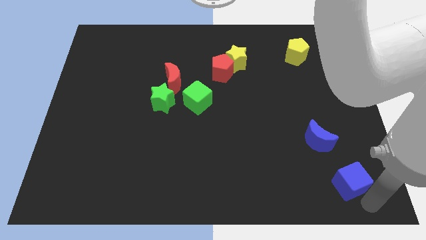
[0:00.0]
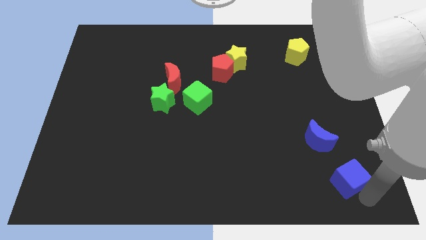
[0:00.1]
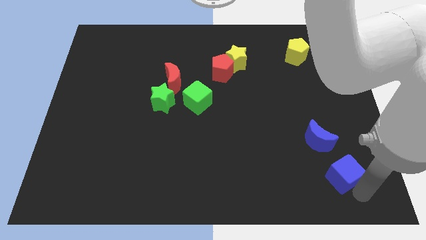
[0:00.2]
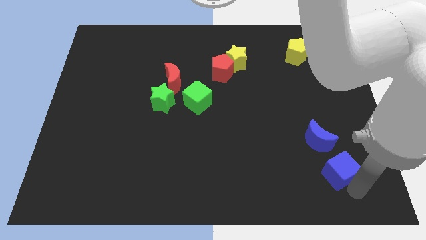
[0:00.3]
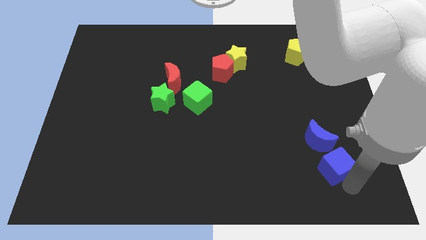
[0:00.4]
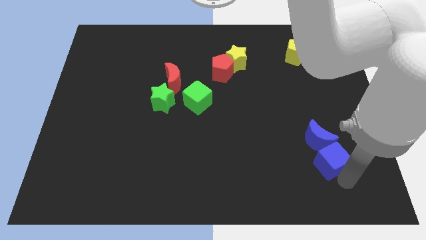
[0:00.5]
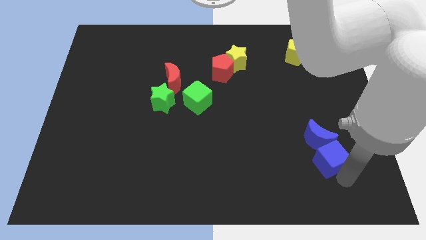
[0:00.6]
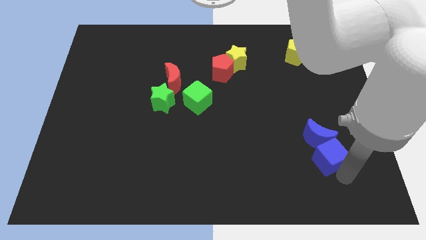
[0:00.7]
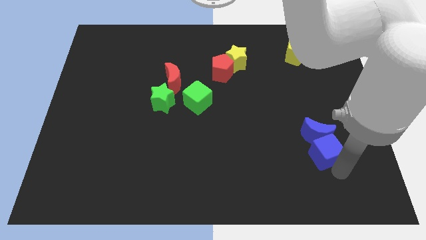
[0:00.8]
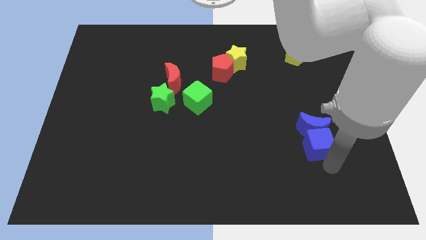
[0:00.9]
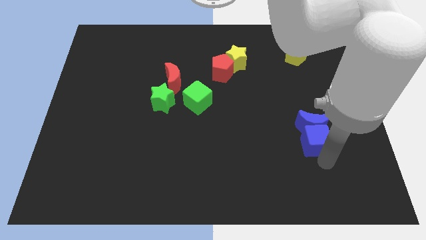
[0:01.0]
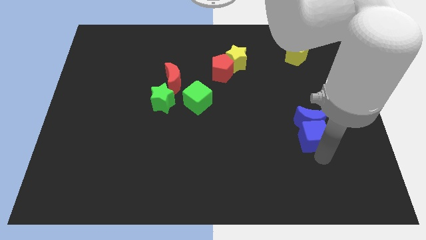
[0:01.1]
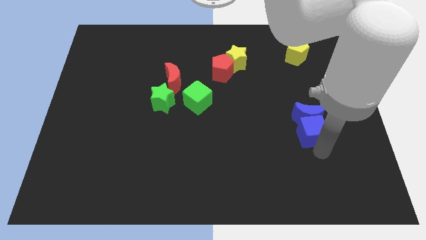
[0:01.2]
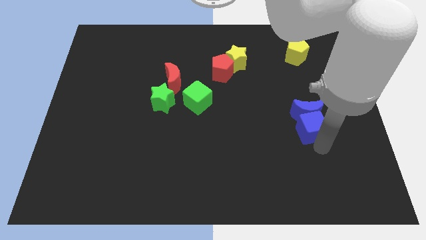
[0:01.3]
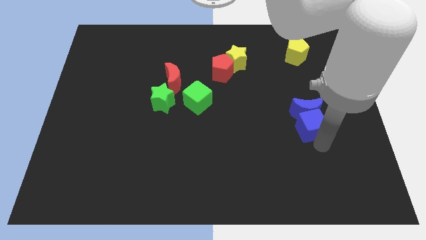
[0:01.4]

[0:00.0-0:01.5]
push the blue cube into the blue crescent to the right center

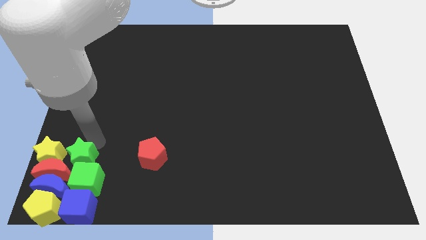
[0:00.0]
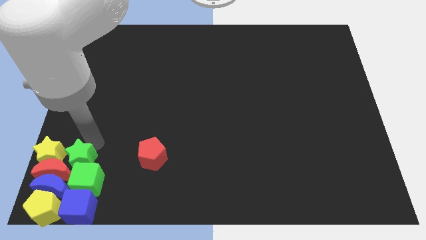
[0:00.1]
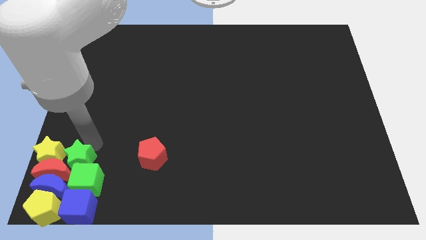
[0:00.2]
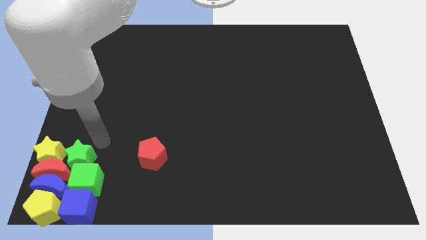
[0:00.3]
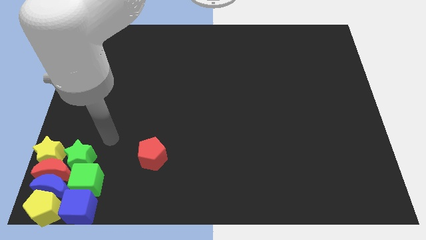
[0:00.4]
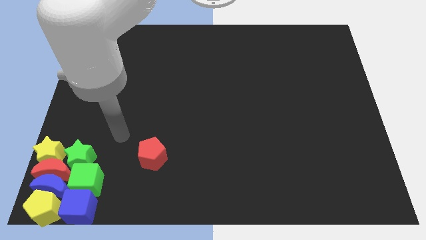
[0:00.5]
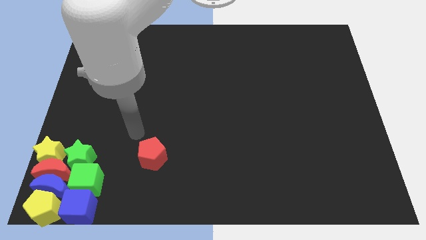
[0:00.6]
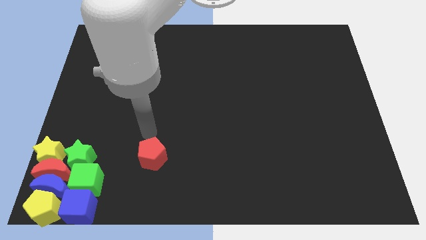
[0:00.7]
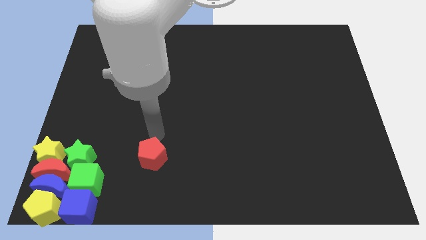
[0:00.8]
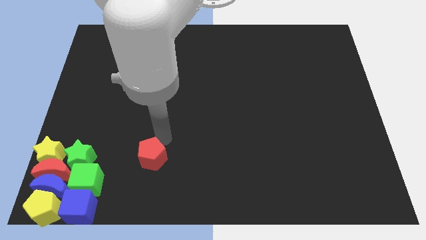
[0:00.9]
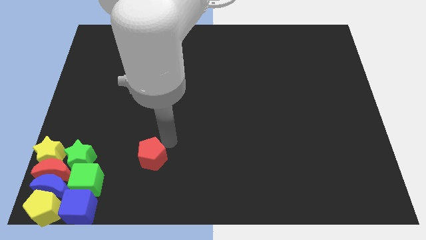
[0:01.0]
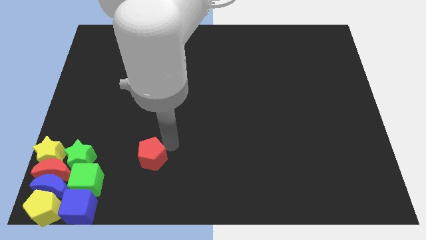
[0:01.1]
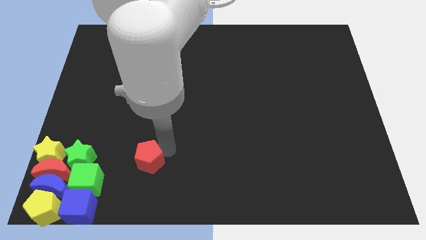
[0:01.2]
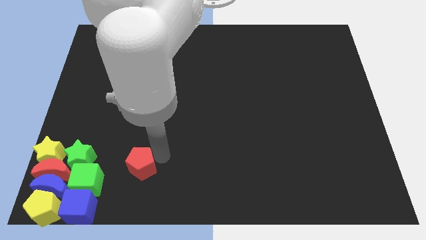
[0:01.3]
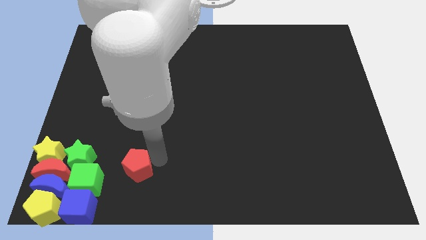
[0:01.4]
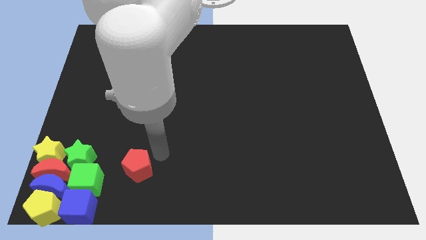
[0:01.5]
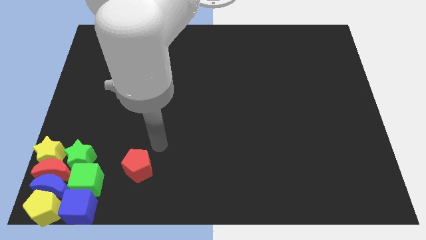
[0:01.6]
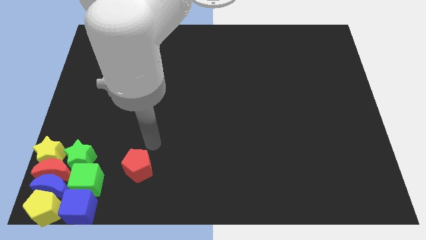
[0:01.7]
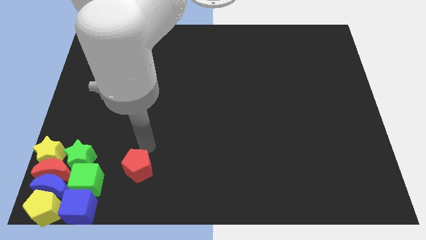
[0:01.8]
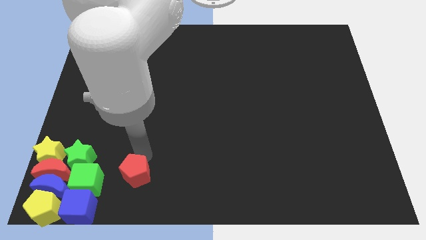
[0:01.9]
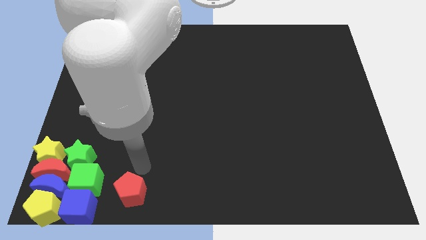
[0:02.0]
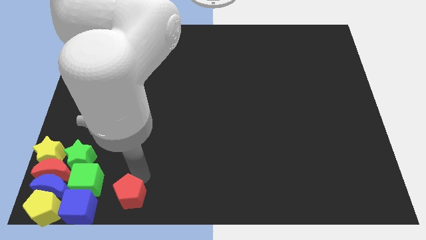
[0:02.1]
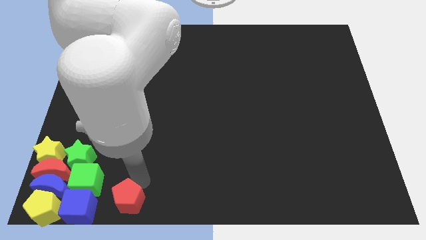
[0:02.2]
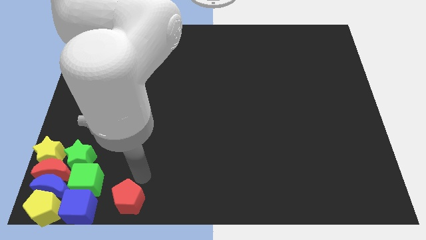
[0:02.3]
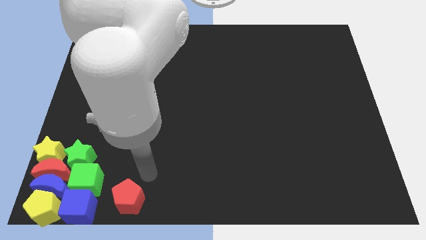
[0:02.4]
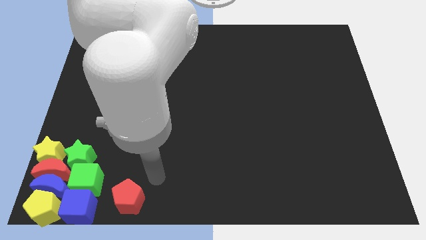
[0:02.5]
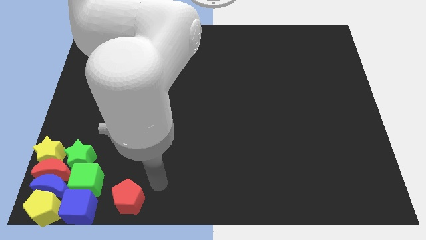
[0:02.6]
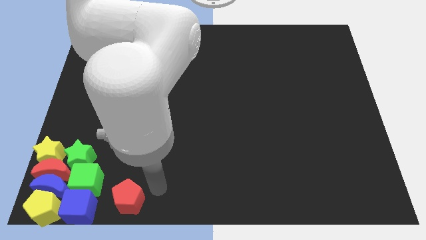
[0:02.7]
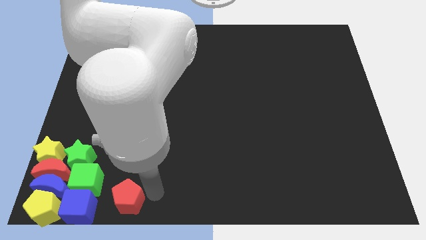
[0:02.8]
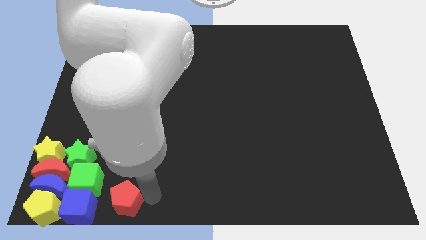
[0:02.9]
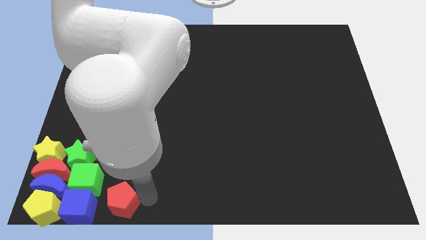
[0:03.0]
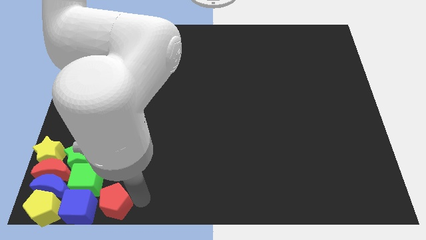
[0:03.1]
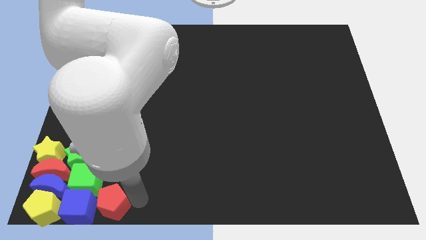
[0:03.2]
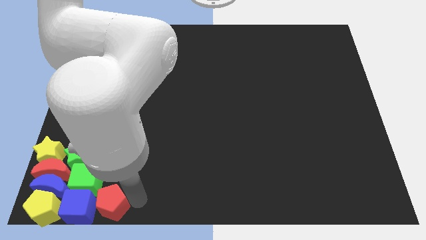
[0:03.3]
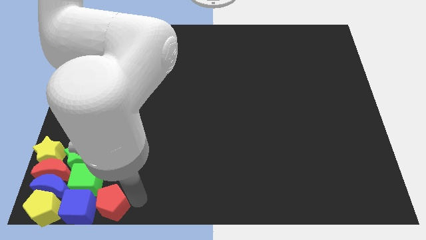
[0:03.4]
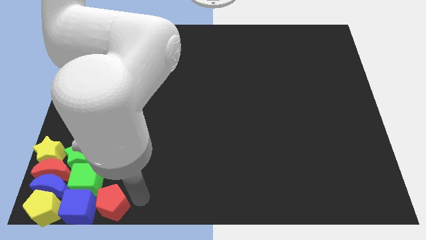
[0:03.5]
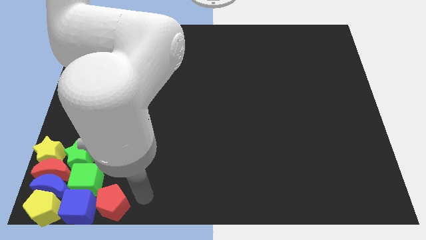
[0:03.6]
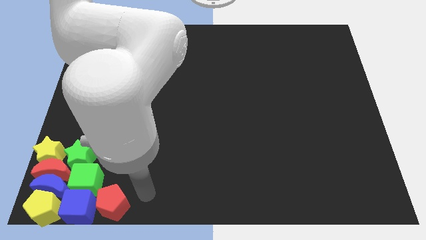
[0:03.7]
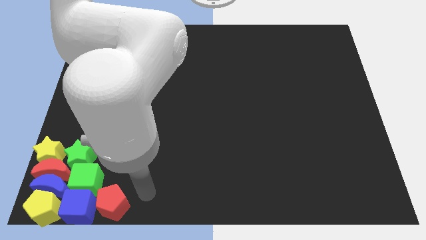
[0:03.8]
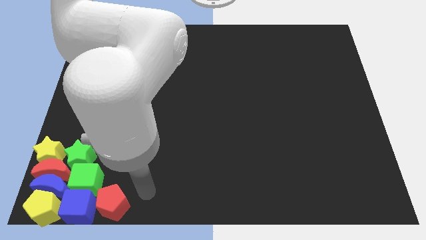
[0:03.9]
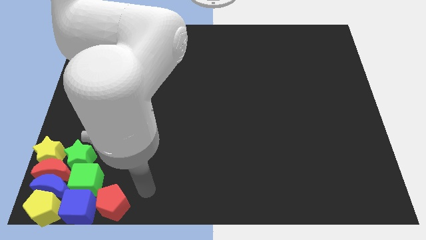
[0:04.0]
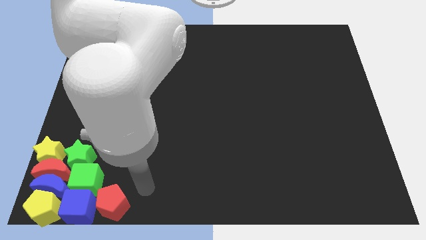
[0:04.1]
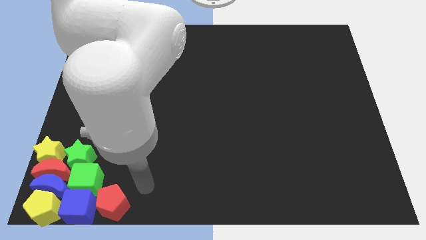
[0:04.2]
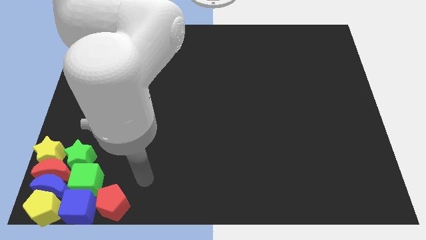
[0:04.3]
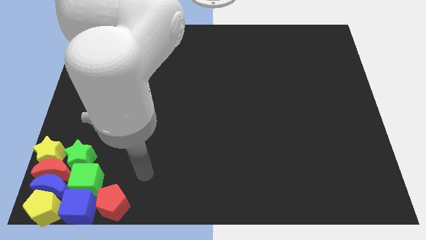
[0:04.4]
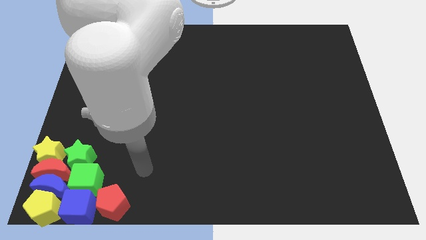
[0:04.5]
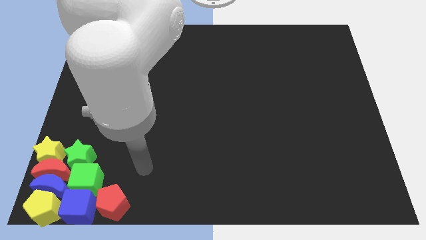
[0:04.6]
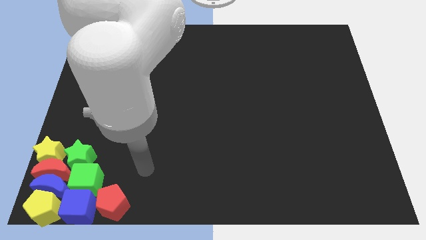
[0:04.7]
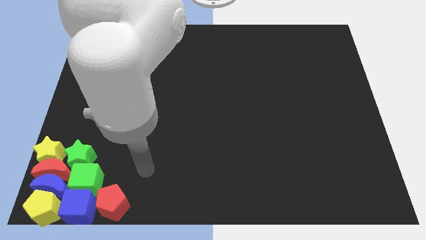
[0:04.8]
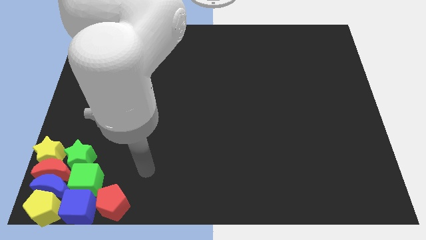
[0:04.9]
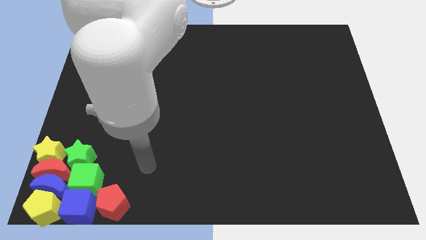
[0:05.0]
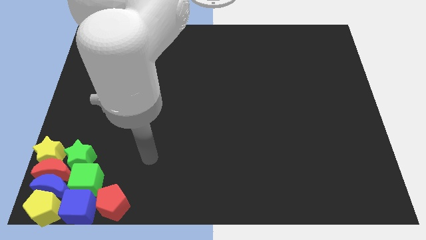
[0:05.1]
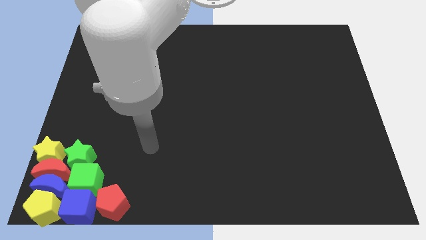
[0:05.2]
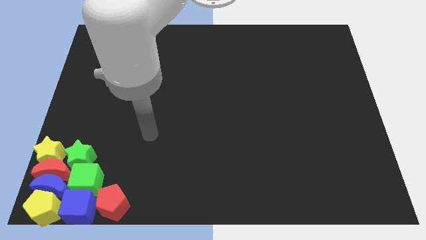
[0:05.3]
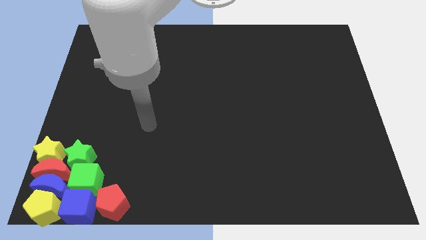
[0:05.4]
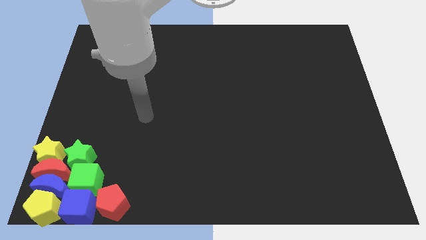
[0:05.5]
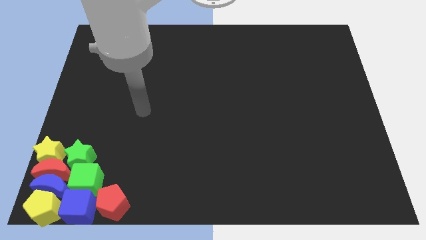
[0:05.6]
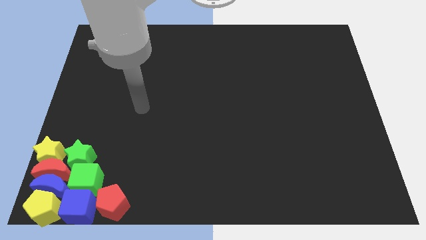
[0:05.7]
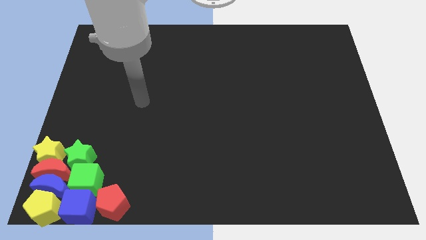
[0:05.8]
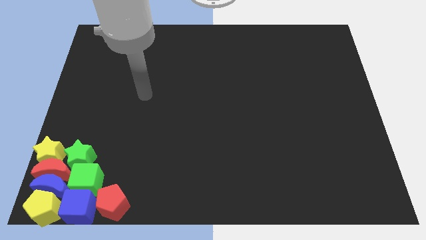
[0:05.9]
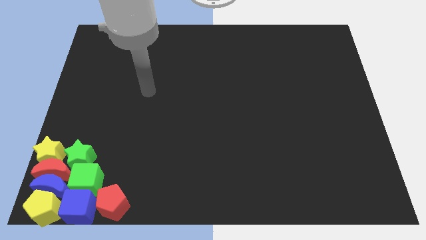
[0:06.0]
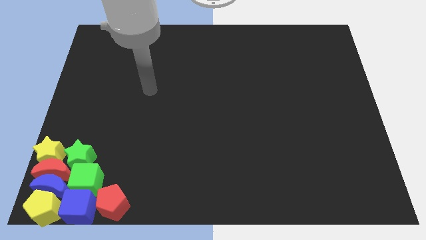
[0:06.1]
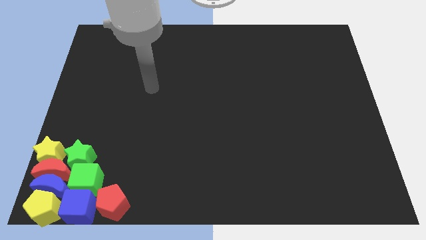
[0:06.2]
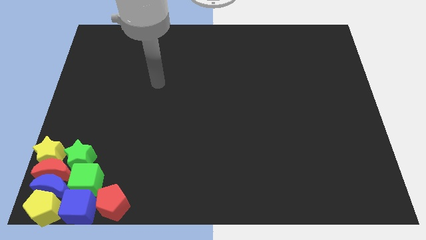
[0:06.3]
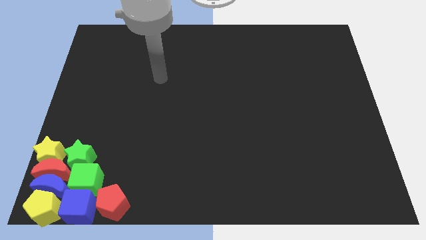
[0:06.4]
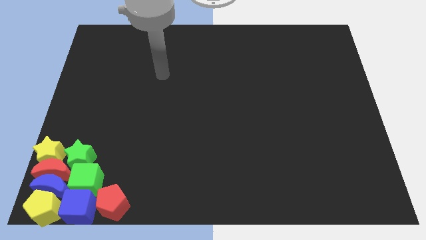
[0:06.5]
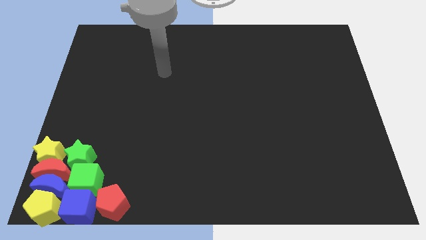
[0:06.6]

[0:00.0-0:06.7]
move red pentagon right beside the blue cube

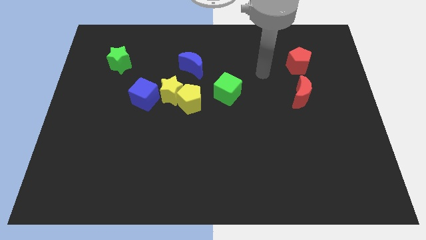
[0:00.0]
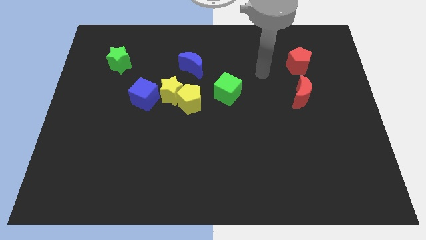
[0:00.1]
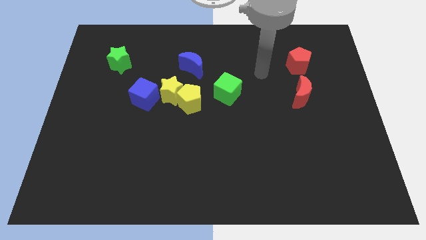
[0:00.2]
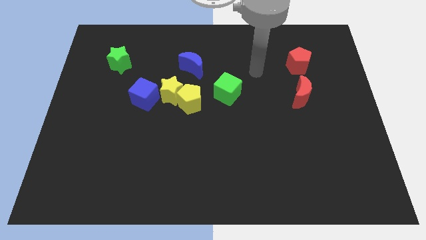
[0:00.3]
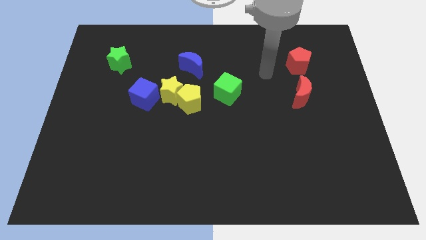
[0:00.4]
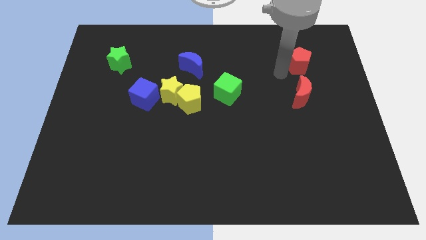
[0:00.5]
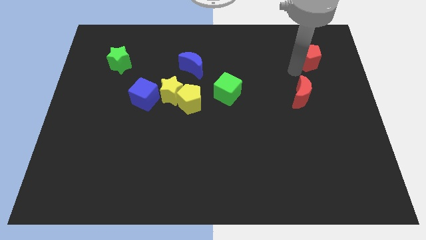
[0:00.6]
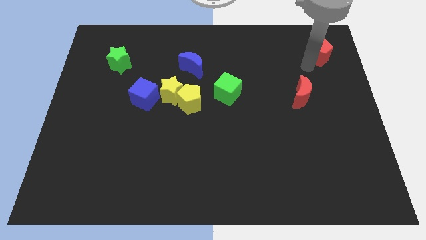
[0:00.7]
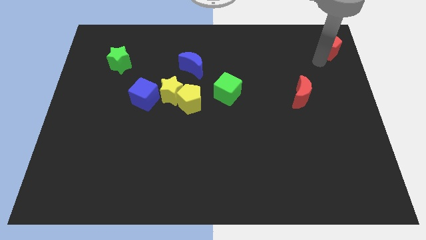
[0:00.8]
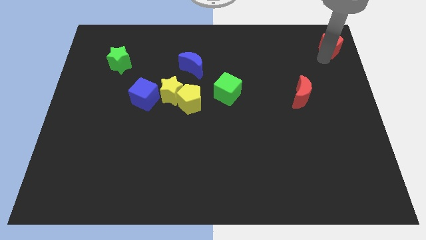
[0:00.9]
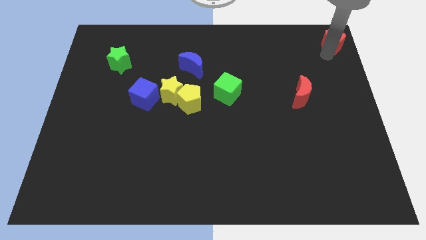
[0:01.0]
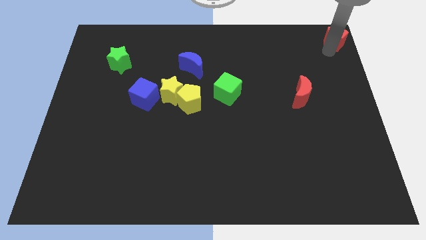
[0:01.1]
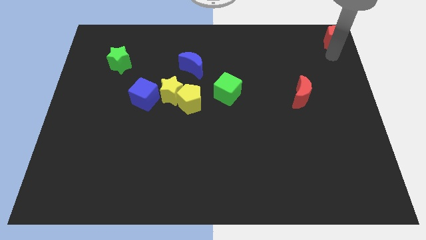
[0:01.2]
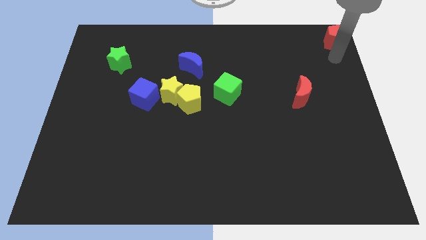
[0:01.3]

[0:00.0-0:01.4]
move the red pentagon to the top right
